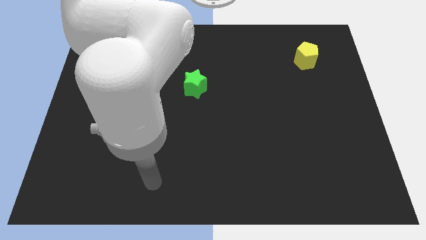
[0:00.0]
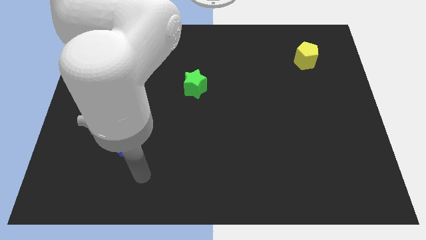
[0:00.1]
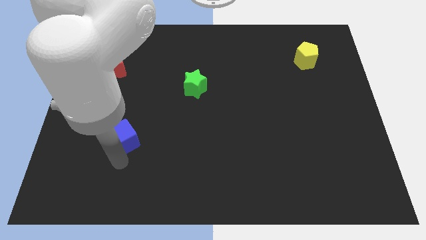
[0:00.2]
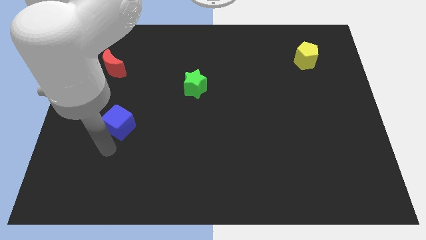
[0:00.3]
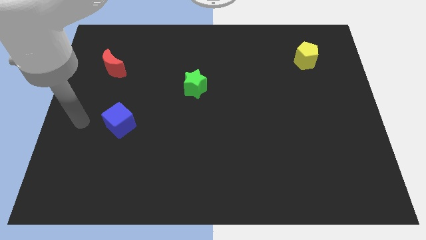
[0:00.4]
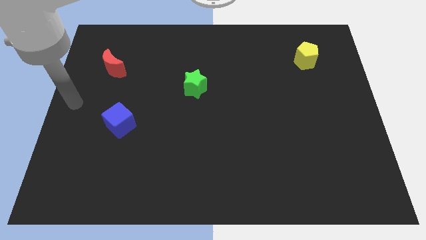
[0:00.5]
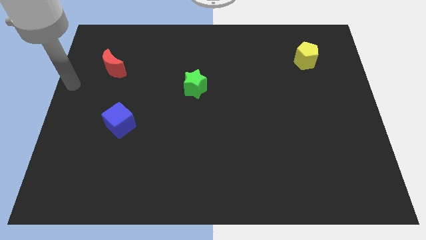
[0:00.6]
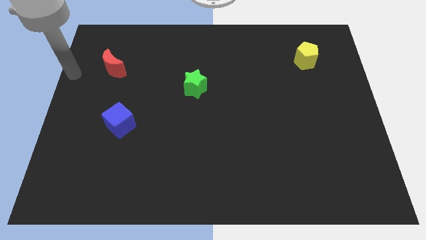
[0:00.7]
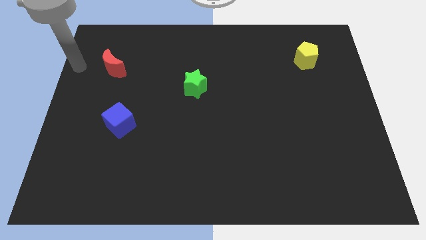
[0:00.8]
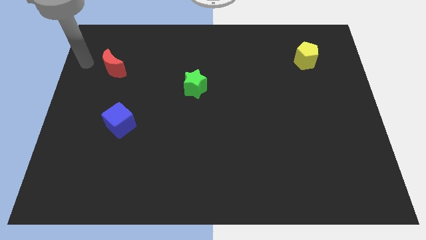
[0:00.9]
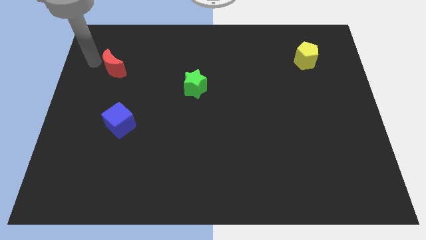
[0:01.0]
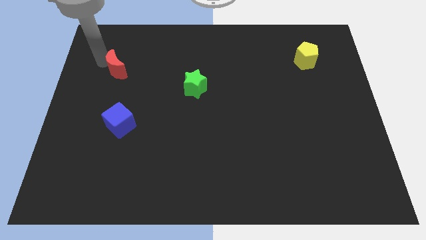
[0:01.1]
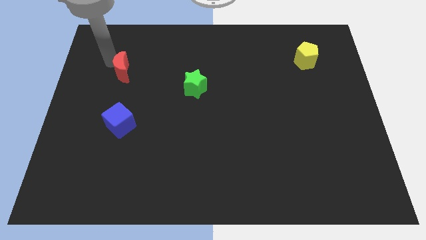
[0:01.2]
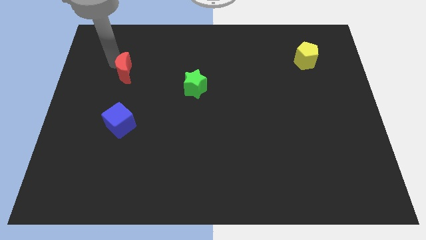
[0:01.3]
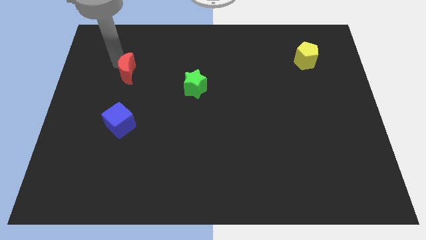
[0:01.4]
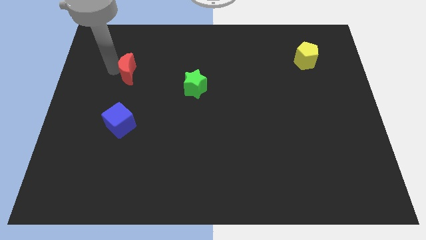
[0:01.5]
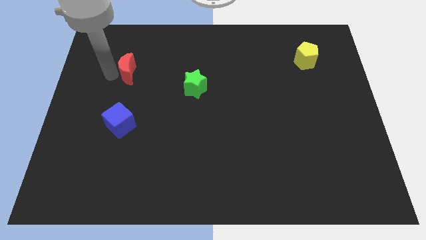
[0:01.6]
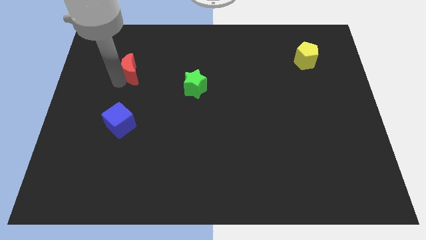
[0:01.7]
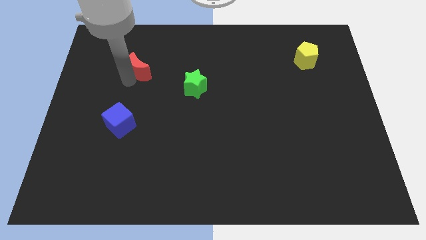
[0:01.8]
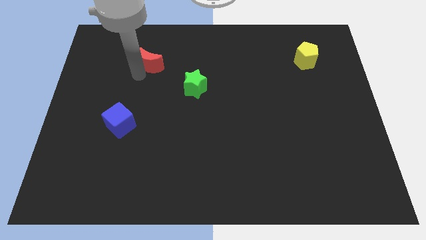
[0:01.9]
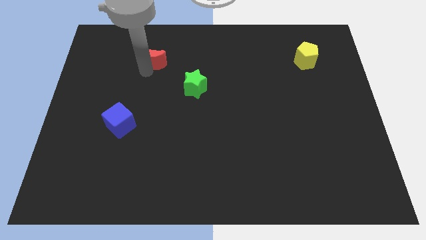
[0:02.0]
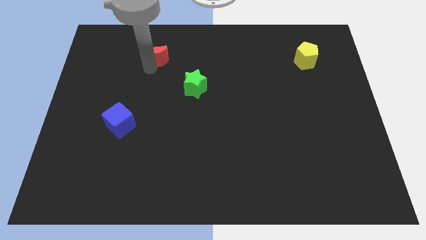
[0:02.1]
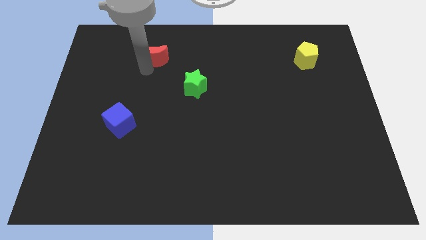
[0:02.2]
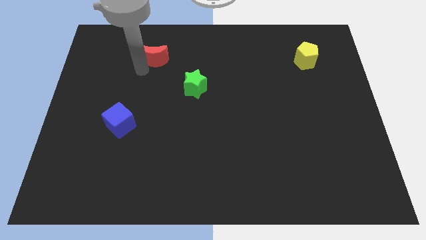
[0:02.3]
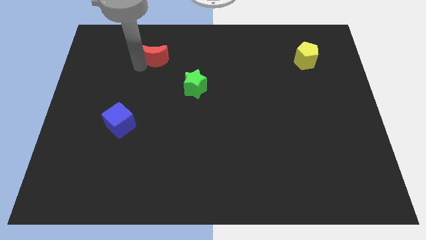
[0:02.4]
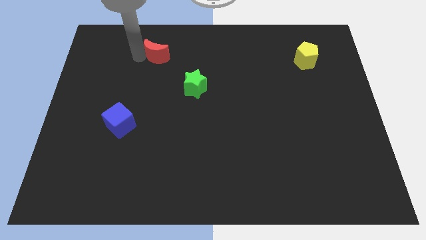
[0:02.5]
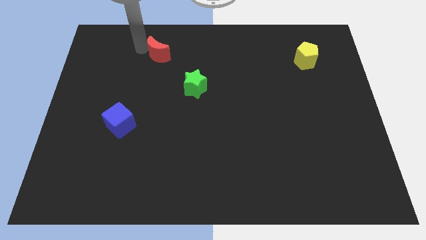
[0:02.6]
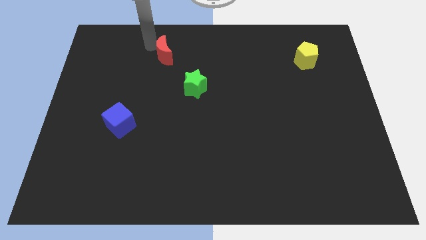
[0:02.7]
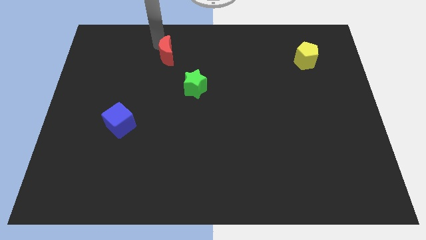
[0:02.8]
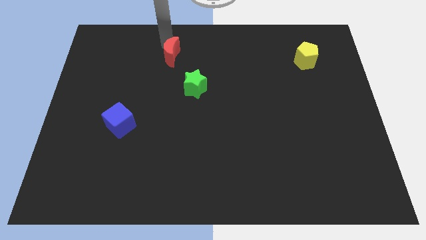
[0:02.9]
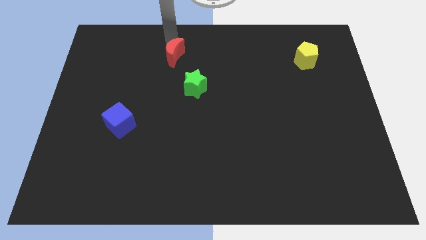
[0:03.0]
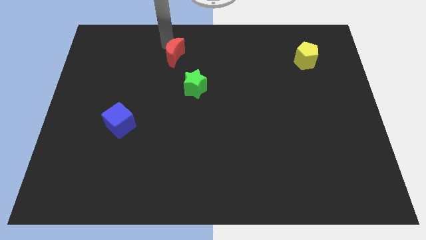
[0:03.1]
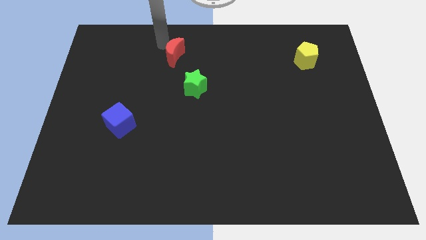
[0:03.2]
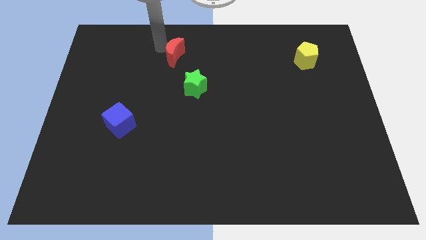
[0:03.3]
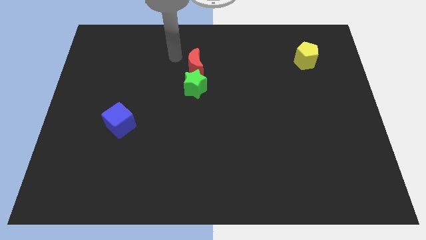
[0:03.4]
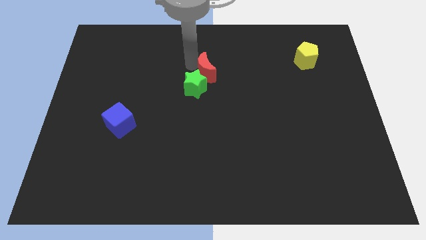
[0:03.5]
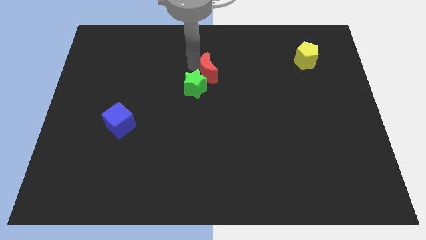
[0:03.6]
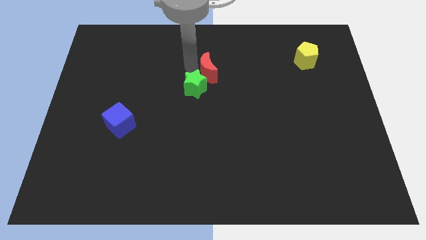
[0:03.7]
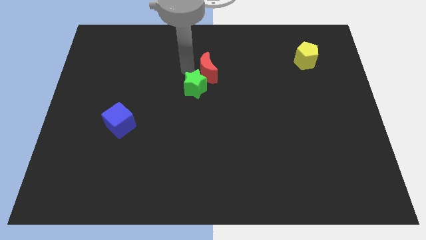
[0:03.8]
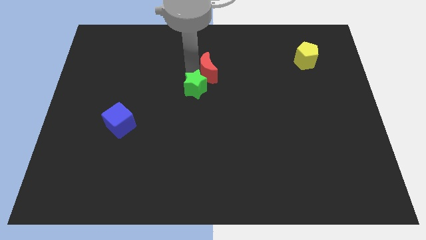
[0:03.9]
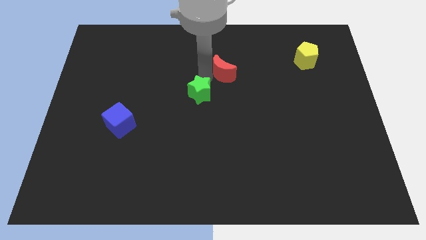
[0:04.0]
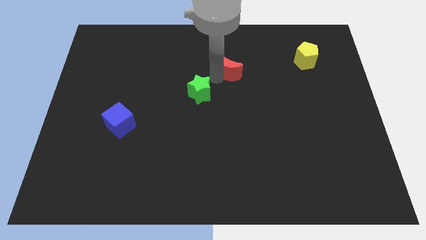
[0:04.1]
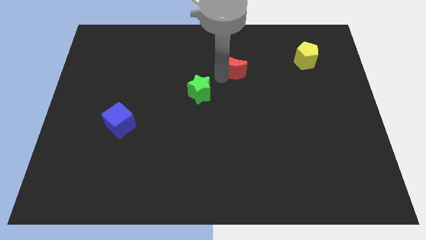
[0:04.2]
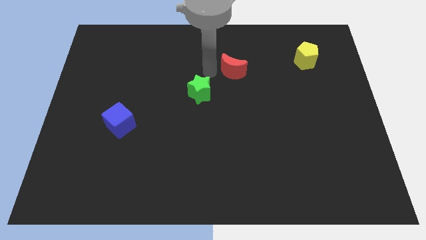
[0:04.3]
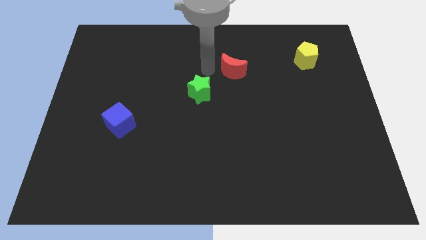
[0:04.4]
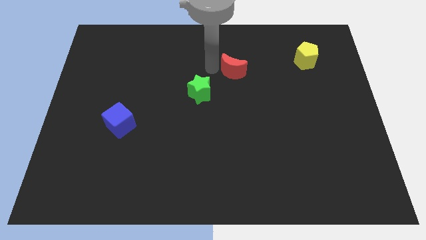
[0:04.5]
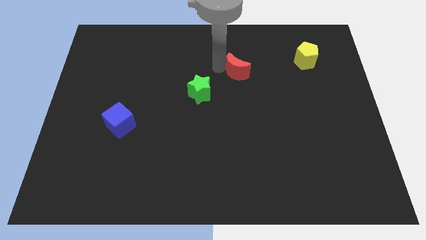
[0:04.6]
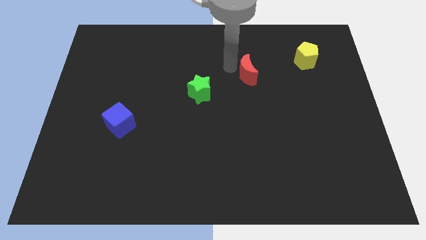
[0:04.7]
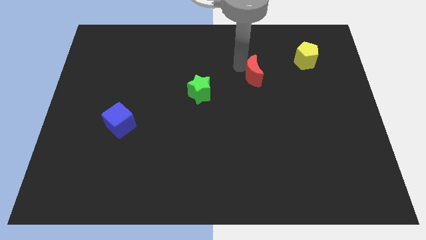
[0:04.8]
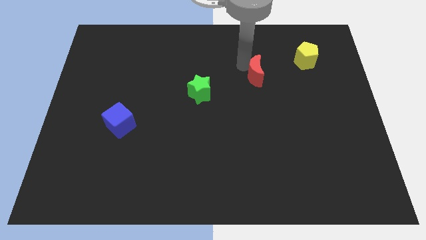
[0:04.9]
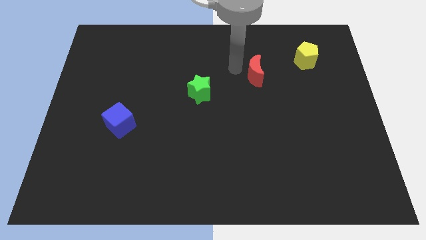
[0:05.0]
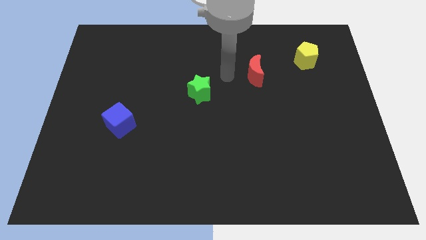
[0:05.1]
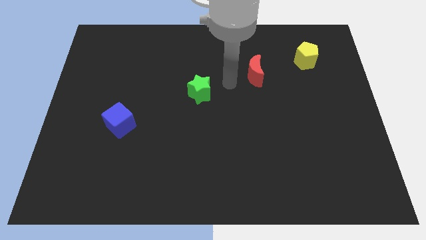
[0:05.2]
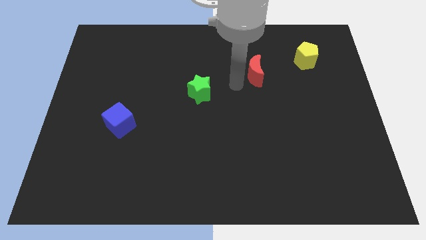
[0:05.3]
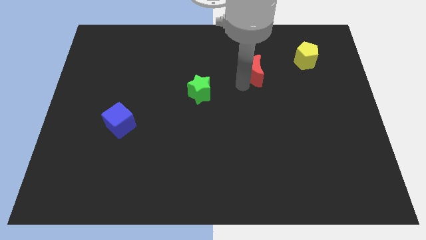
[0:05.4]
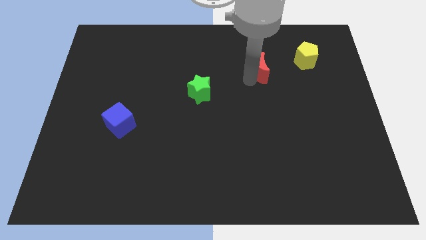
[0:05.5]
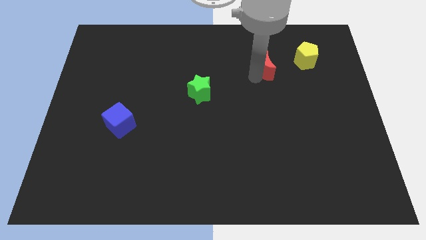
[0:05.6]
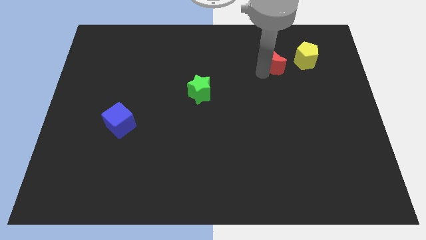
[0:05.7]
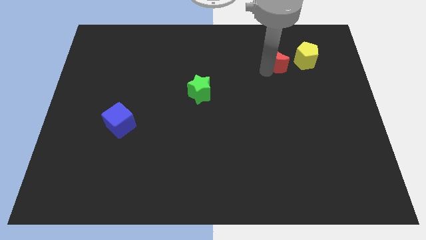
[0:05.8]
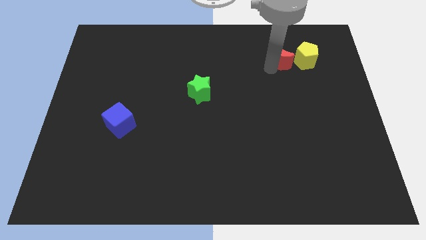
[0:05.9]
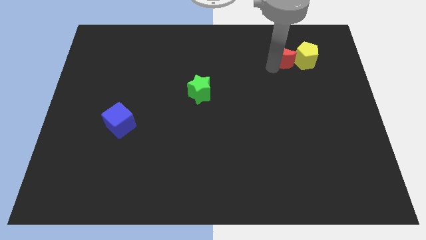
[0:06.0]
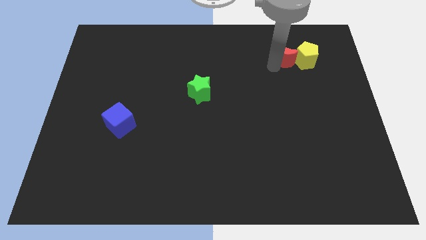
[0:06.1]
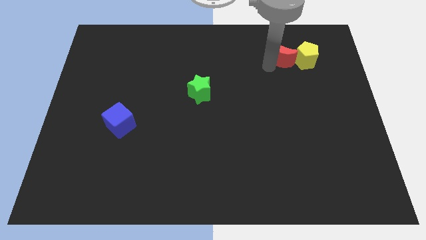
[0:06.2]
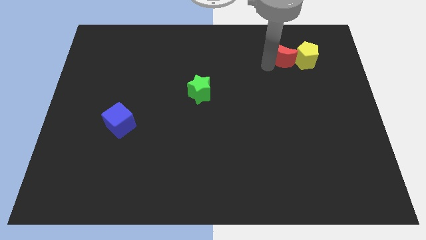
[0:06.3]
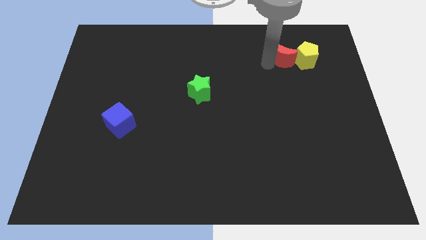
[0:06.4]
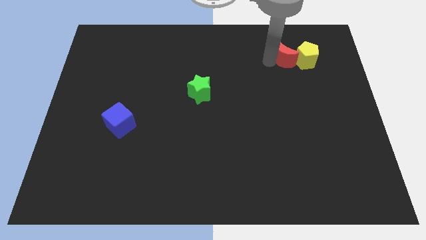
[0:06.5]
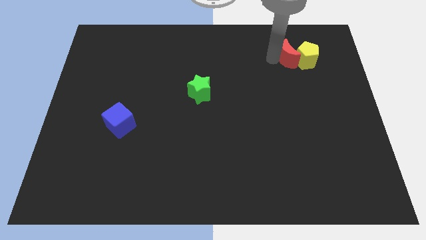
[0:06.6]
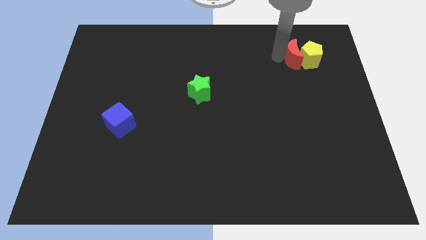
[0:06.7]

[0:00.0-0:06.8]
push the moon towards the yellow block

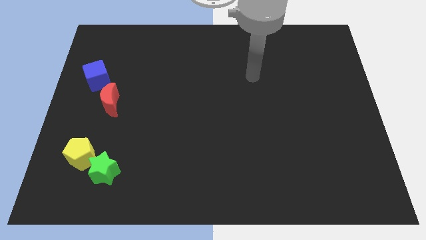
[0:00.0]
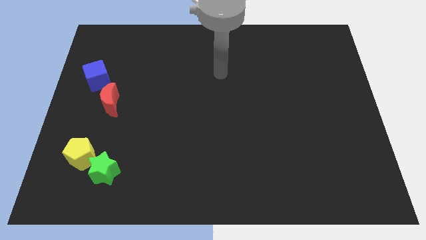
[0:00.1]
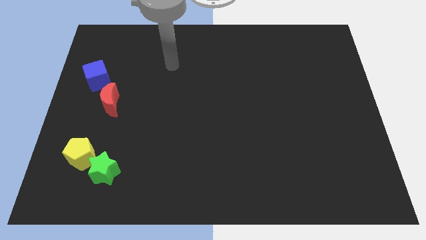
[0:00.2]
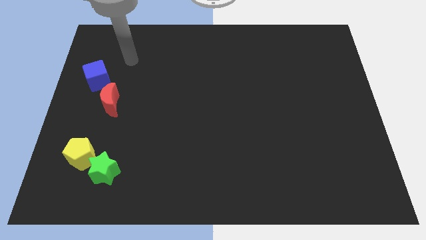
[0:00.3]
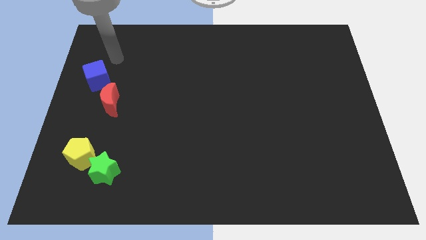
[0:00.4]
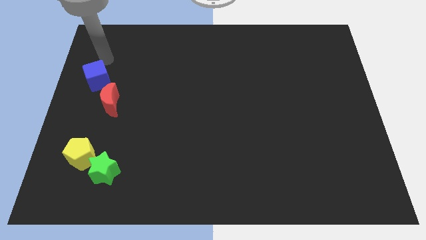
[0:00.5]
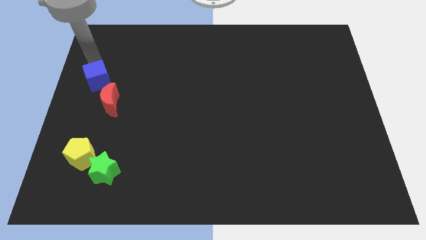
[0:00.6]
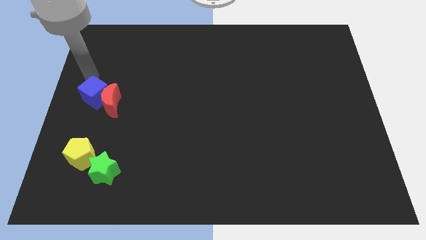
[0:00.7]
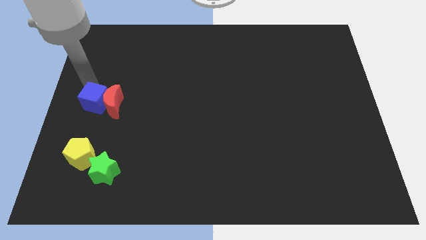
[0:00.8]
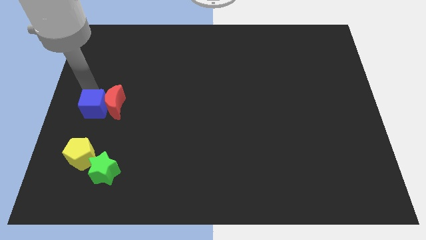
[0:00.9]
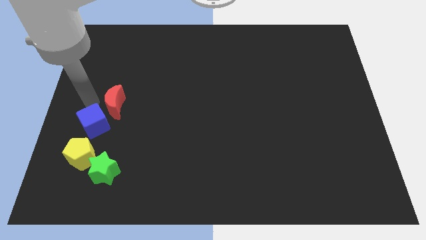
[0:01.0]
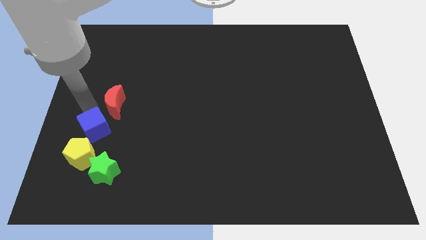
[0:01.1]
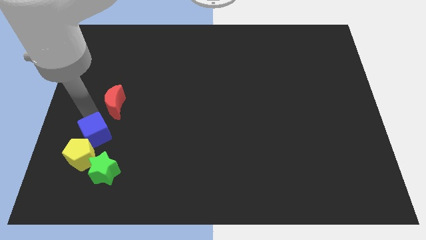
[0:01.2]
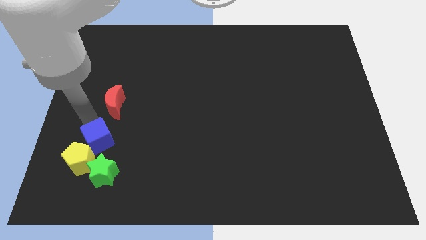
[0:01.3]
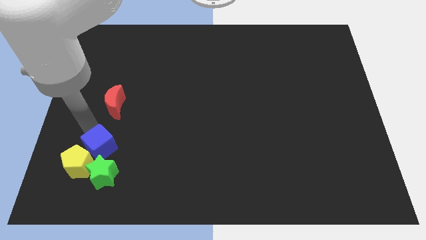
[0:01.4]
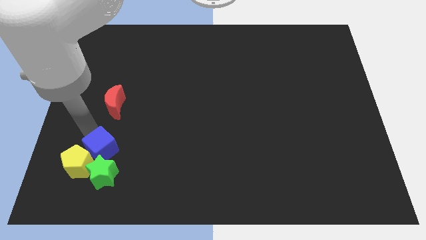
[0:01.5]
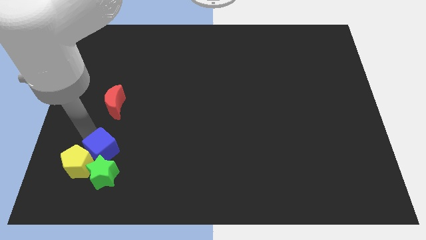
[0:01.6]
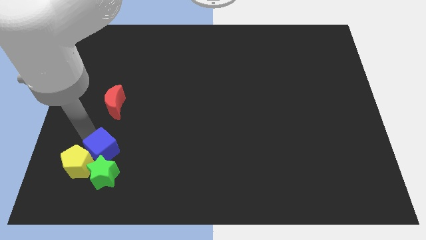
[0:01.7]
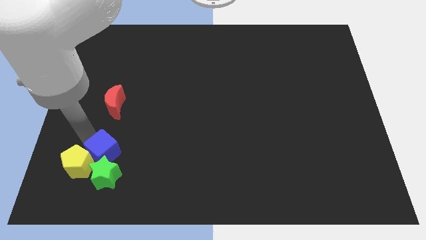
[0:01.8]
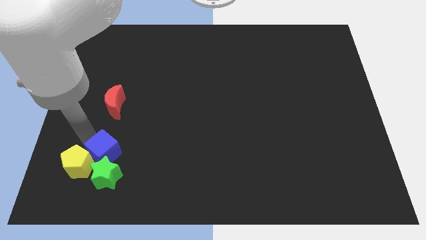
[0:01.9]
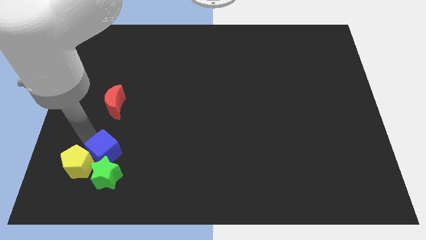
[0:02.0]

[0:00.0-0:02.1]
slide the blue block to the green block
